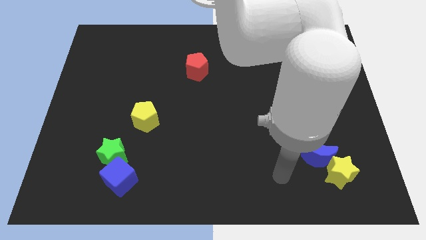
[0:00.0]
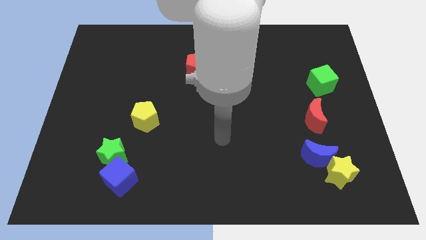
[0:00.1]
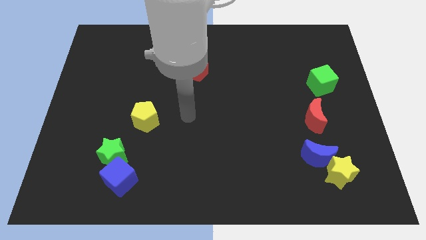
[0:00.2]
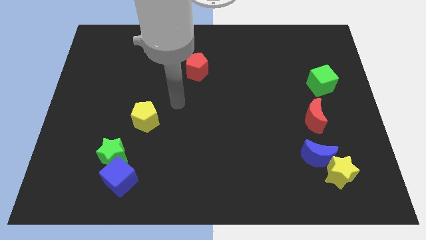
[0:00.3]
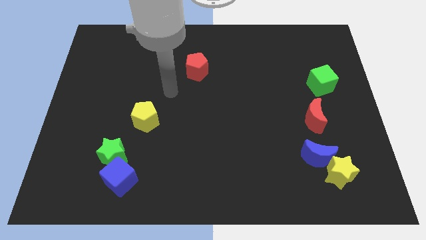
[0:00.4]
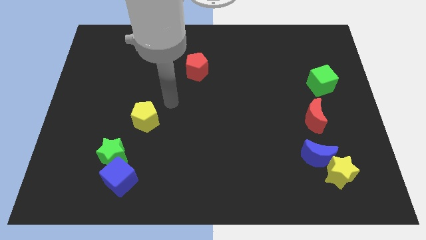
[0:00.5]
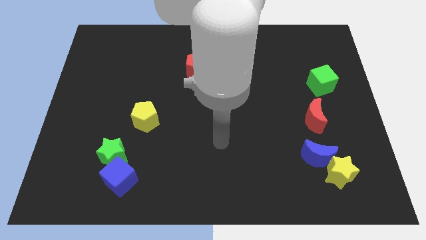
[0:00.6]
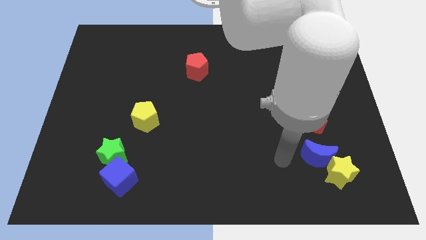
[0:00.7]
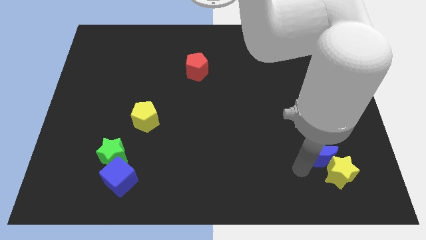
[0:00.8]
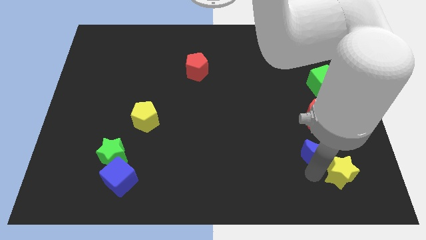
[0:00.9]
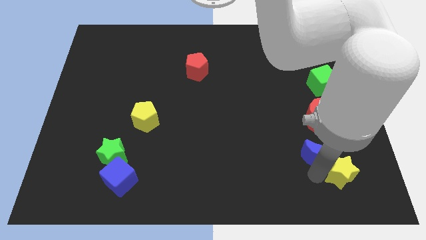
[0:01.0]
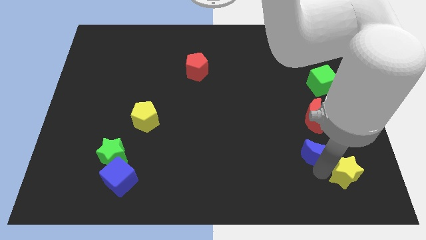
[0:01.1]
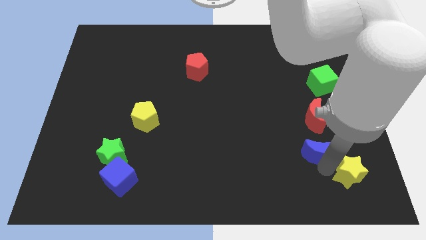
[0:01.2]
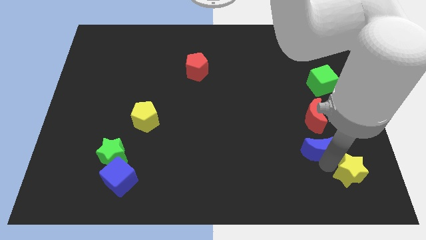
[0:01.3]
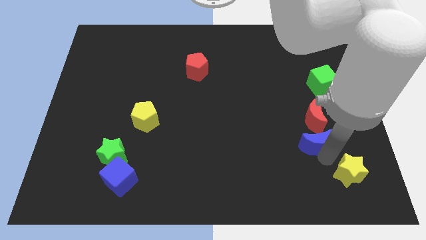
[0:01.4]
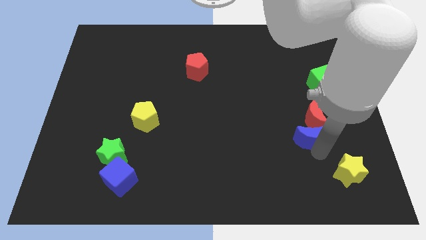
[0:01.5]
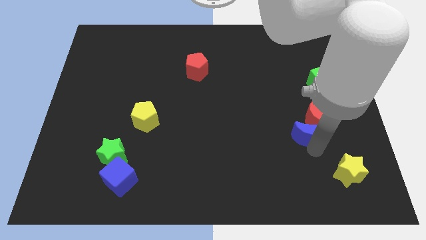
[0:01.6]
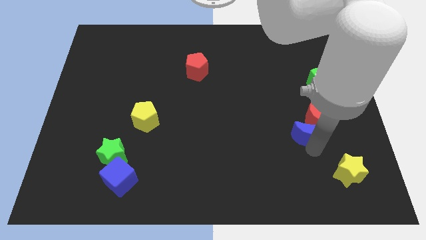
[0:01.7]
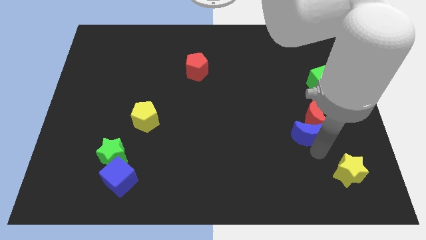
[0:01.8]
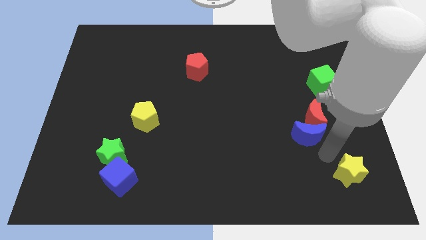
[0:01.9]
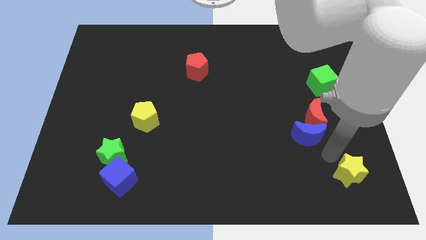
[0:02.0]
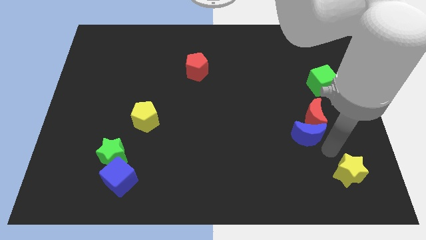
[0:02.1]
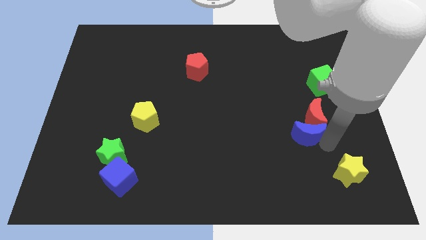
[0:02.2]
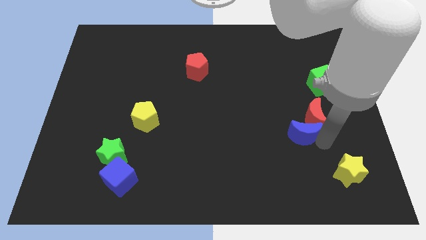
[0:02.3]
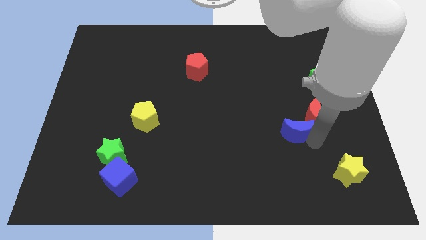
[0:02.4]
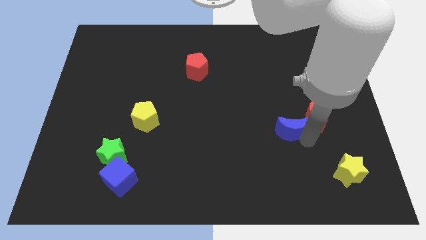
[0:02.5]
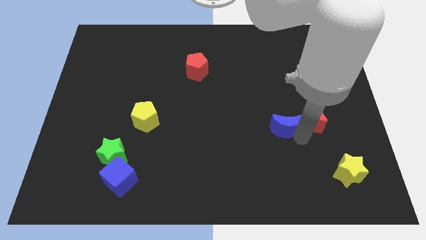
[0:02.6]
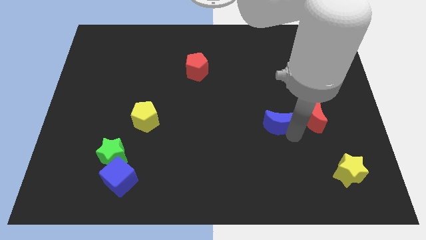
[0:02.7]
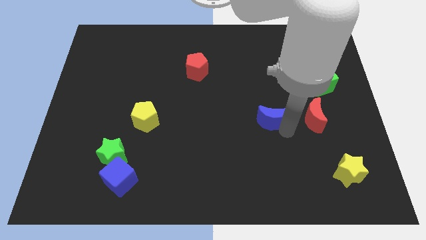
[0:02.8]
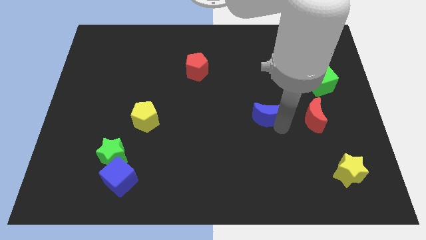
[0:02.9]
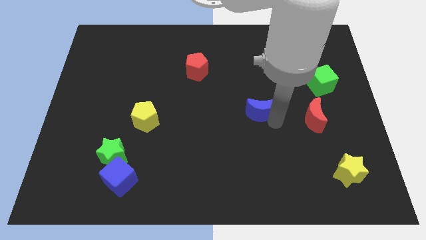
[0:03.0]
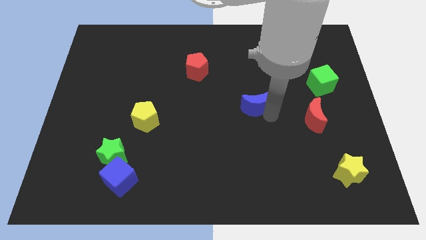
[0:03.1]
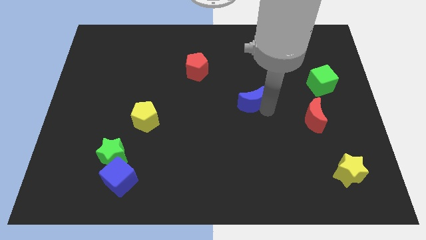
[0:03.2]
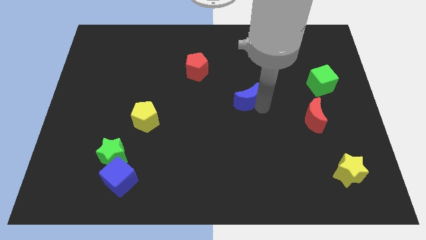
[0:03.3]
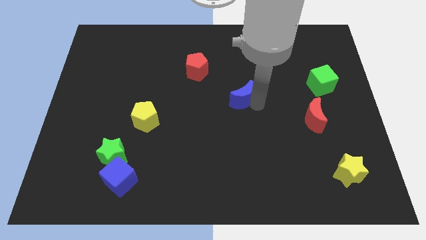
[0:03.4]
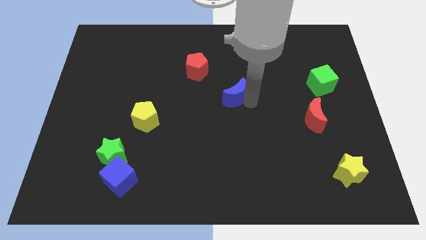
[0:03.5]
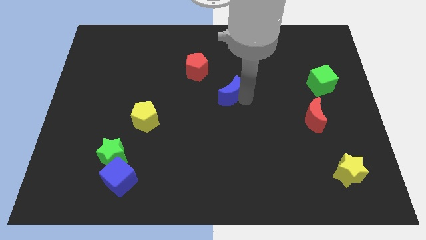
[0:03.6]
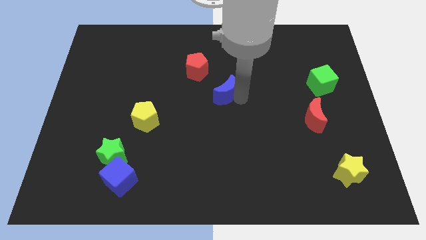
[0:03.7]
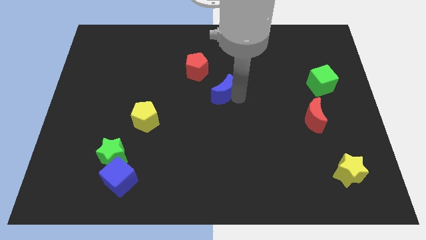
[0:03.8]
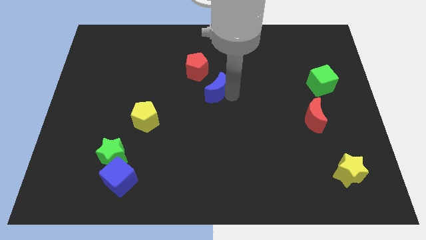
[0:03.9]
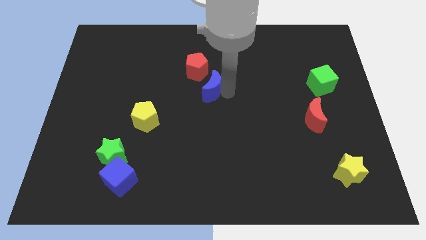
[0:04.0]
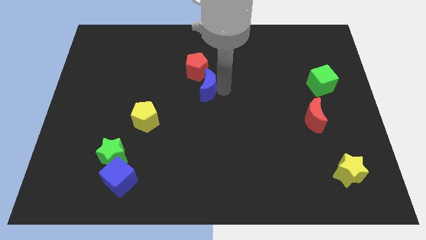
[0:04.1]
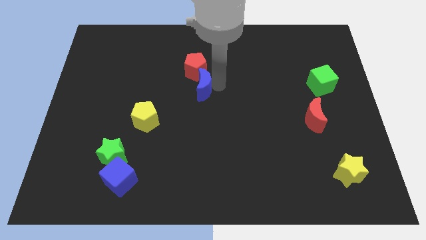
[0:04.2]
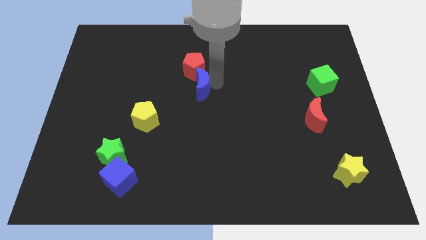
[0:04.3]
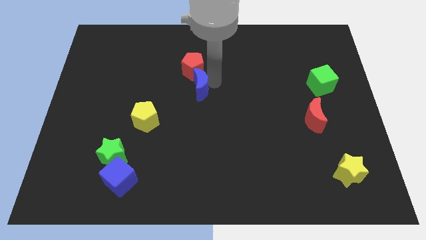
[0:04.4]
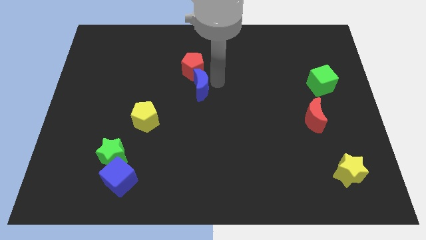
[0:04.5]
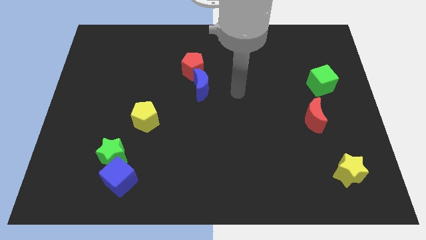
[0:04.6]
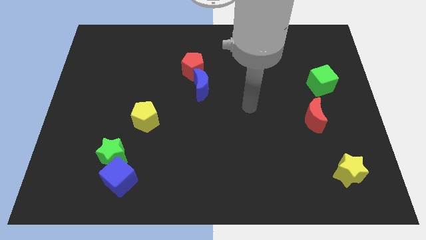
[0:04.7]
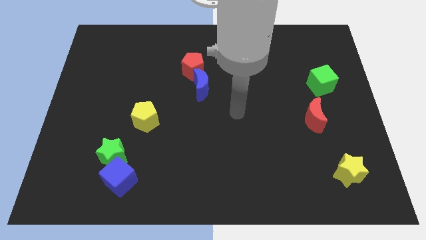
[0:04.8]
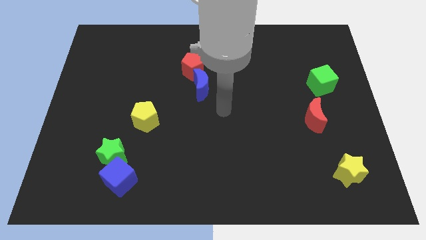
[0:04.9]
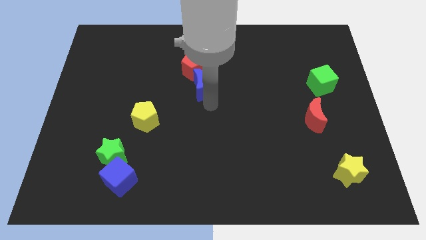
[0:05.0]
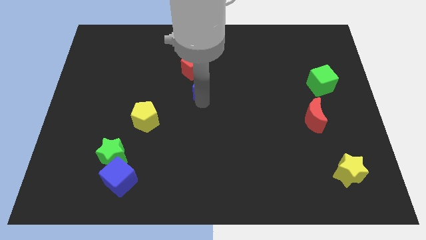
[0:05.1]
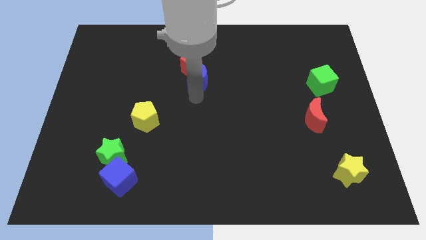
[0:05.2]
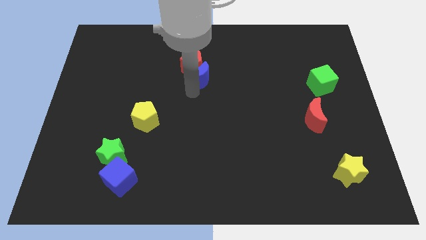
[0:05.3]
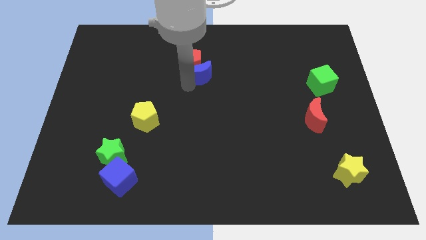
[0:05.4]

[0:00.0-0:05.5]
slide the blue moon to the red pentagon

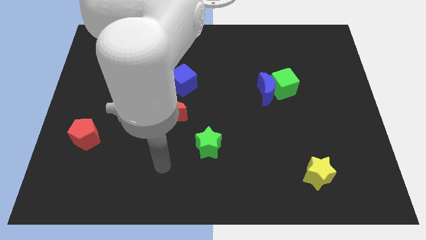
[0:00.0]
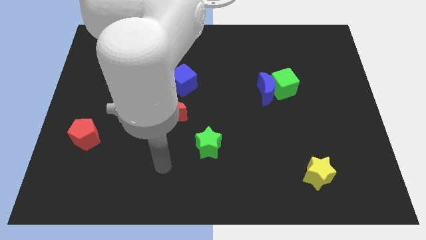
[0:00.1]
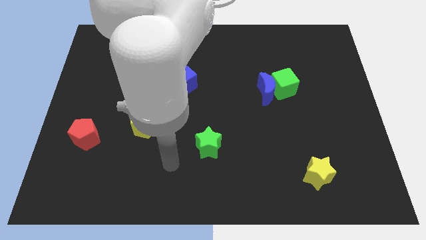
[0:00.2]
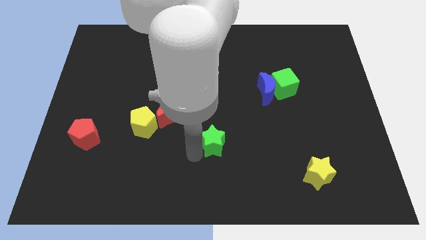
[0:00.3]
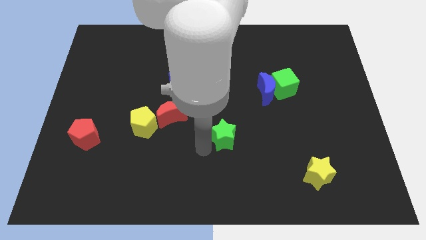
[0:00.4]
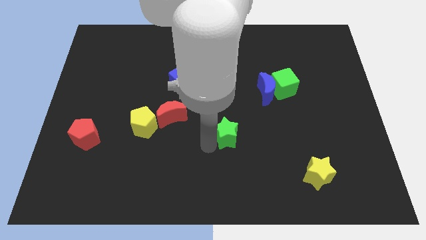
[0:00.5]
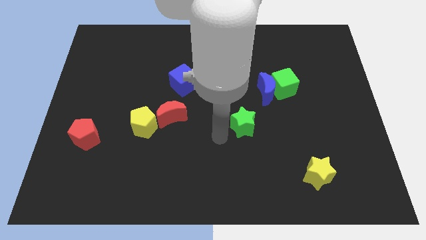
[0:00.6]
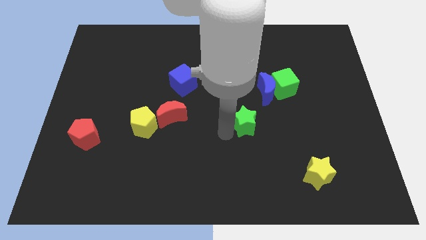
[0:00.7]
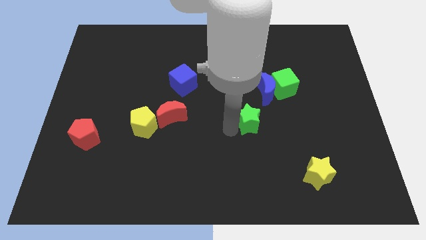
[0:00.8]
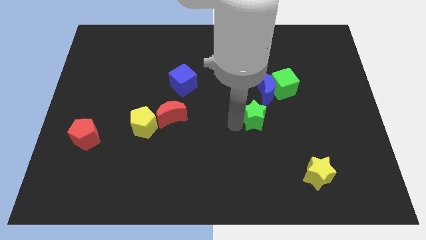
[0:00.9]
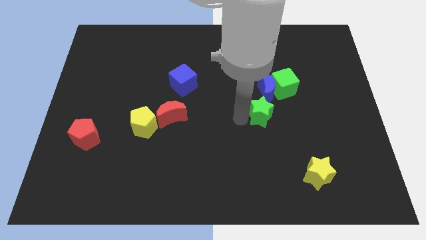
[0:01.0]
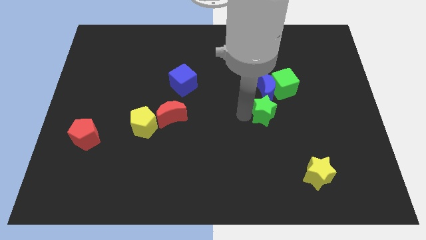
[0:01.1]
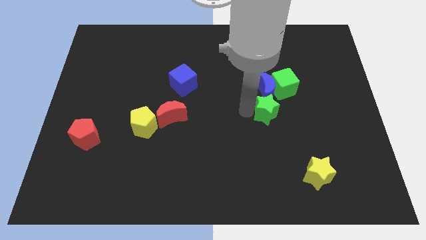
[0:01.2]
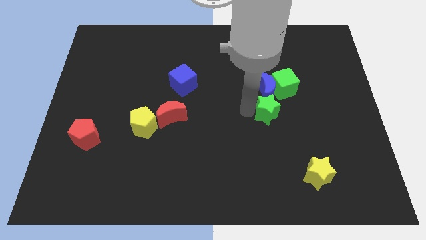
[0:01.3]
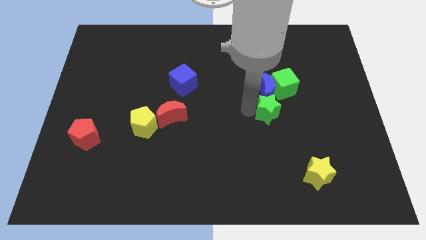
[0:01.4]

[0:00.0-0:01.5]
move the green star next to the blue moon

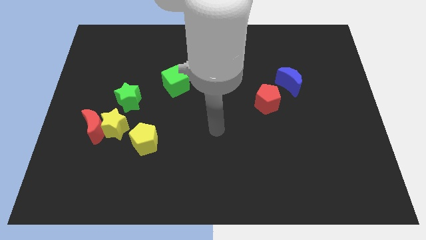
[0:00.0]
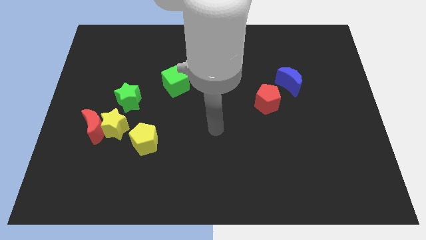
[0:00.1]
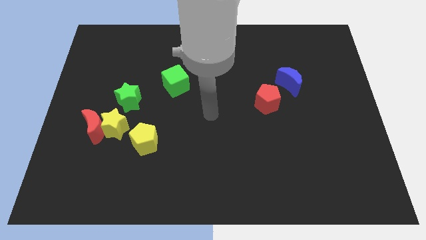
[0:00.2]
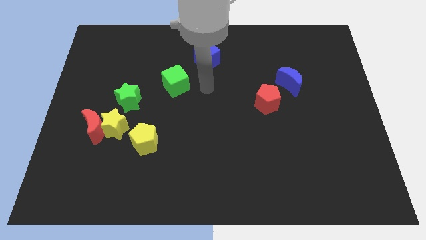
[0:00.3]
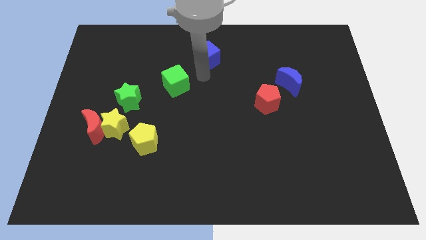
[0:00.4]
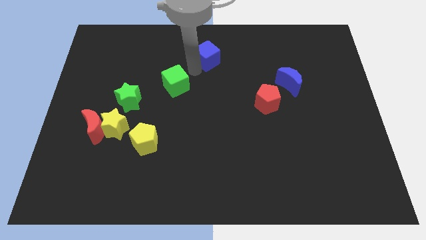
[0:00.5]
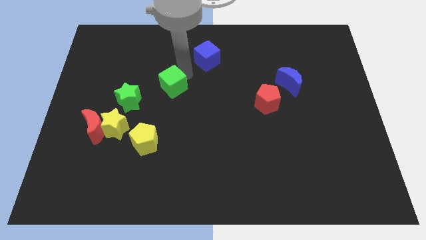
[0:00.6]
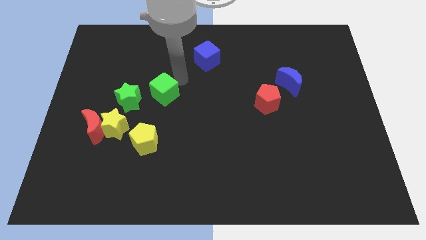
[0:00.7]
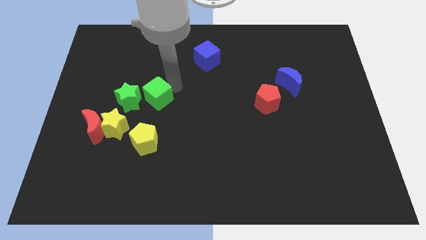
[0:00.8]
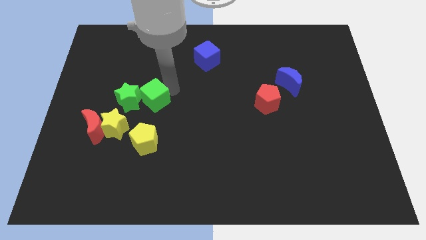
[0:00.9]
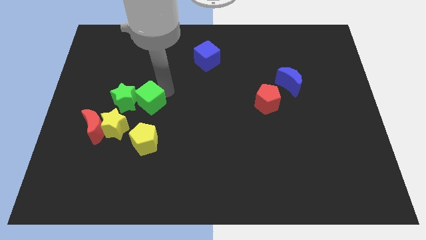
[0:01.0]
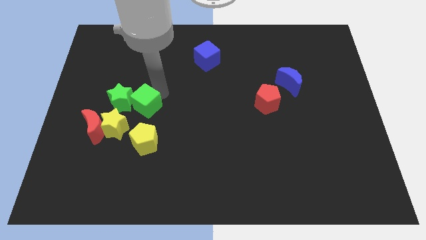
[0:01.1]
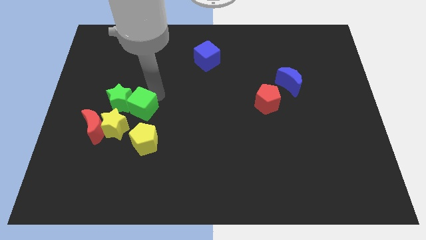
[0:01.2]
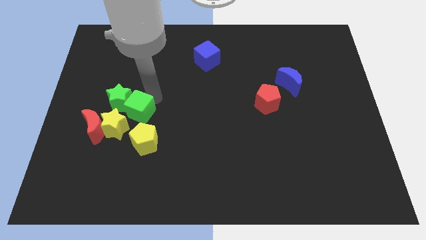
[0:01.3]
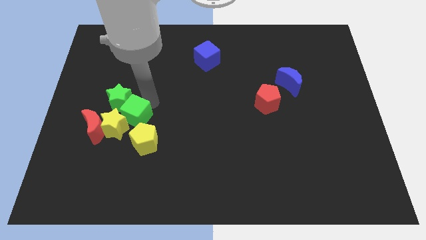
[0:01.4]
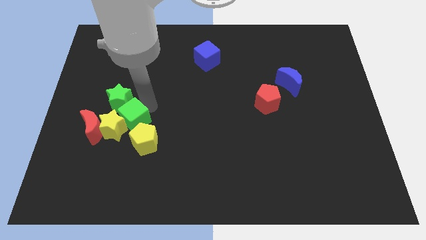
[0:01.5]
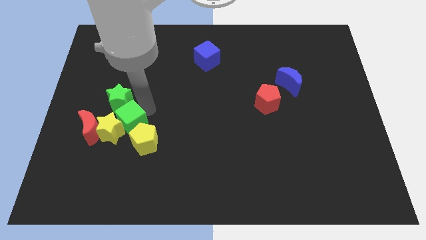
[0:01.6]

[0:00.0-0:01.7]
put the green cube next to the yellow star
